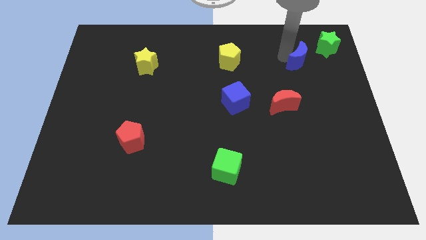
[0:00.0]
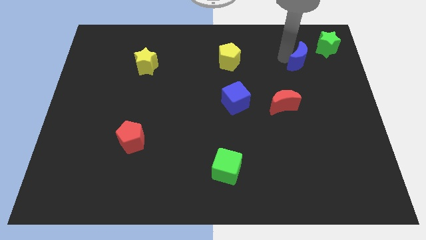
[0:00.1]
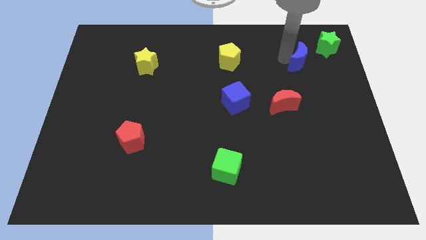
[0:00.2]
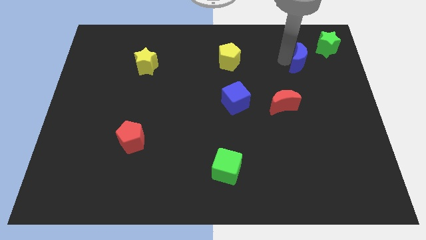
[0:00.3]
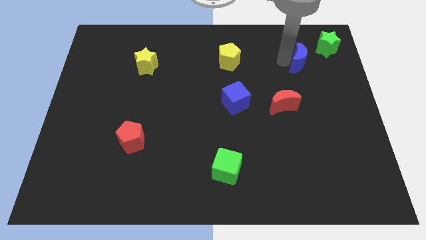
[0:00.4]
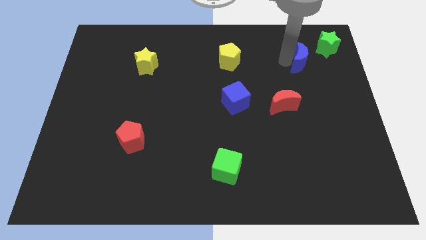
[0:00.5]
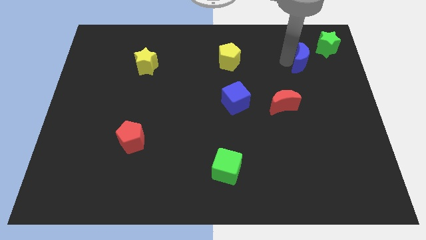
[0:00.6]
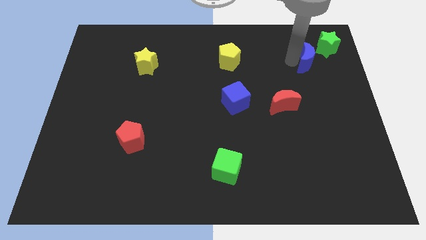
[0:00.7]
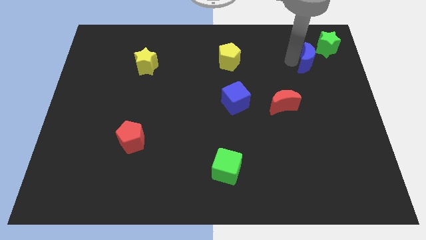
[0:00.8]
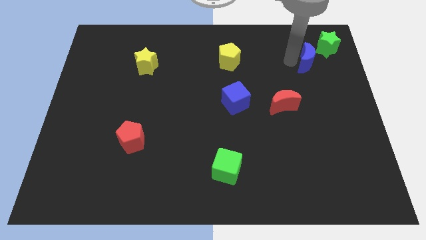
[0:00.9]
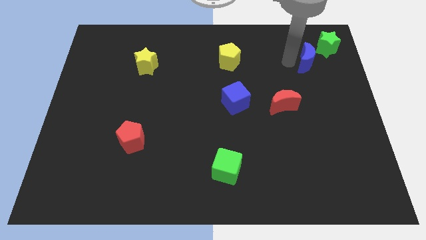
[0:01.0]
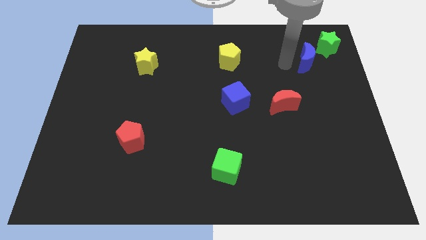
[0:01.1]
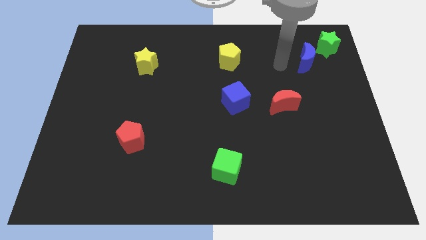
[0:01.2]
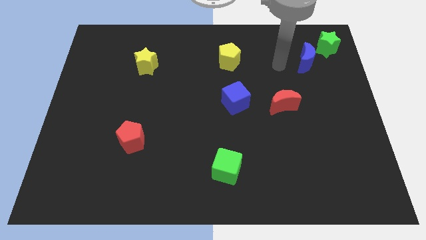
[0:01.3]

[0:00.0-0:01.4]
place the blue crescent to the left of the green star

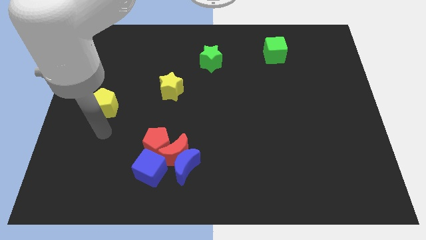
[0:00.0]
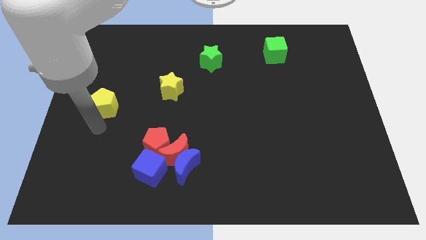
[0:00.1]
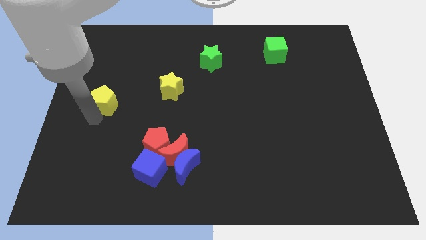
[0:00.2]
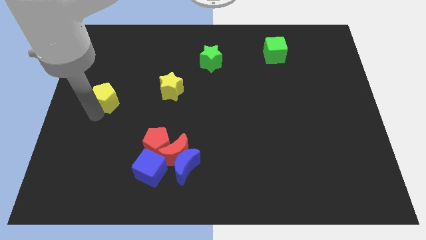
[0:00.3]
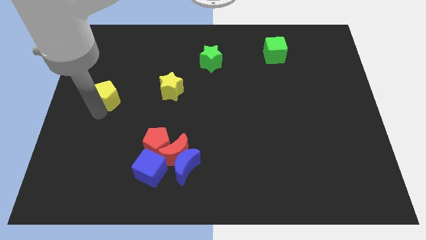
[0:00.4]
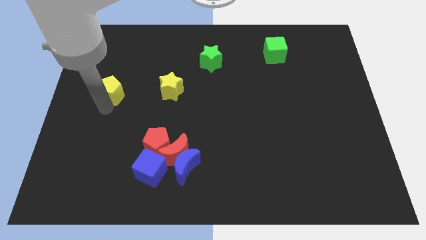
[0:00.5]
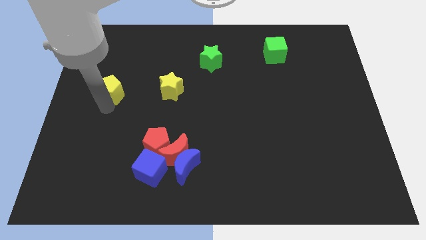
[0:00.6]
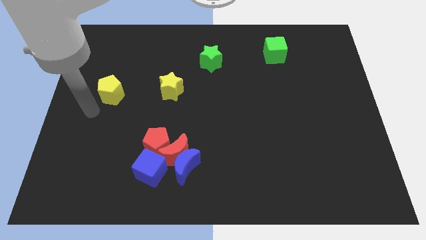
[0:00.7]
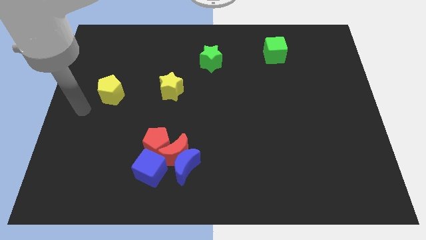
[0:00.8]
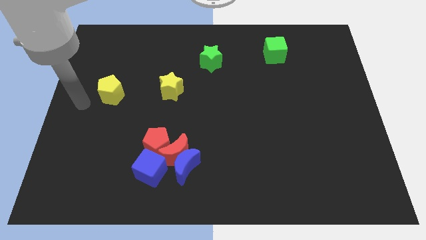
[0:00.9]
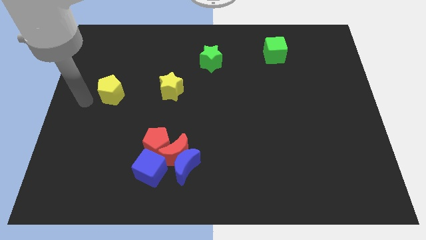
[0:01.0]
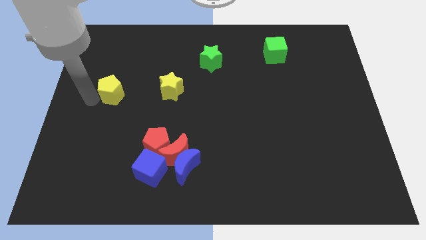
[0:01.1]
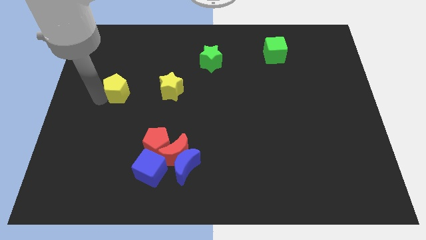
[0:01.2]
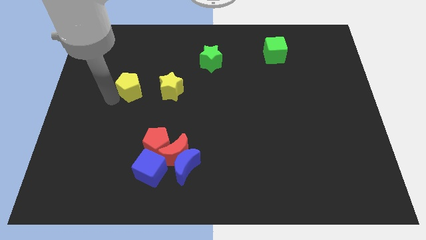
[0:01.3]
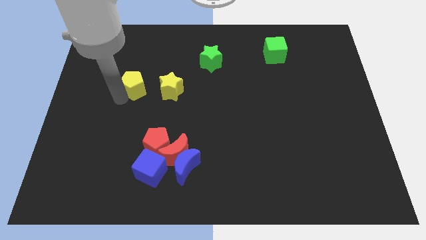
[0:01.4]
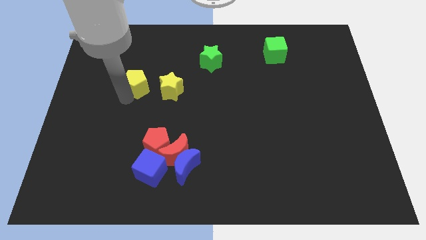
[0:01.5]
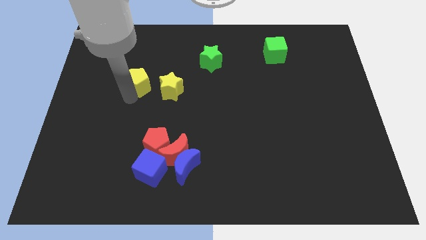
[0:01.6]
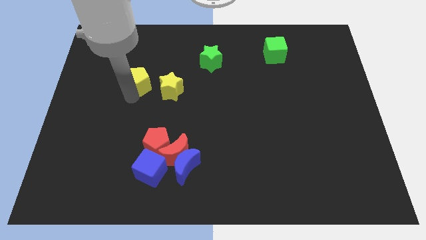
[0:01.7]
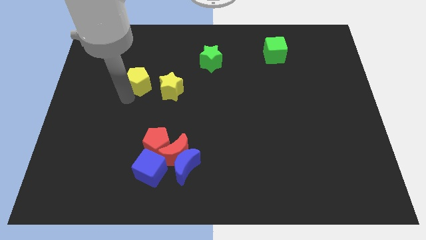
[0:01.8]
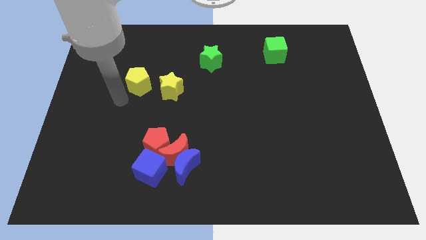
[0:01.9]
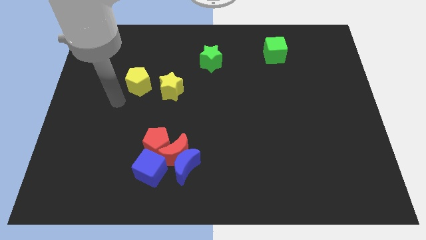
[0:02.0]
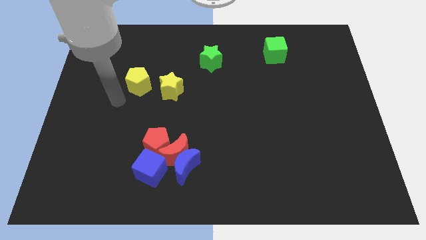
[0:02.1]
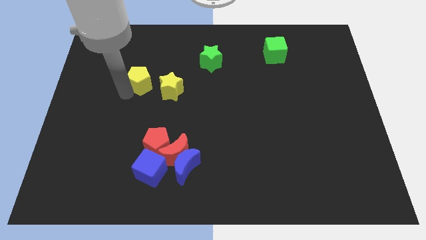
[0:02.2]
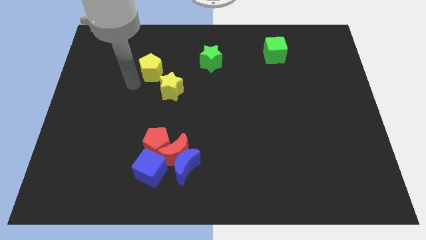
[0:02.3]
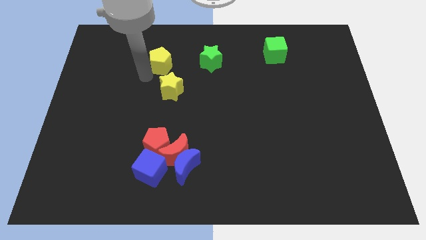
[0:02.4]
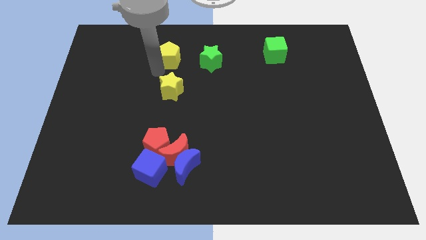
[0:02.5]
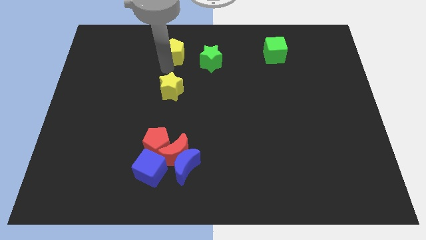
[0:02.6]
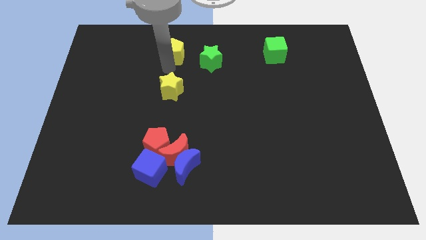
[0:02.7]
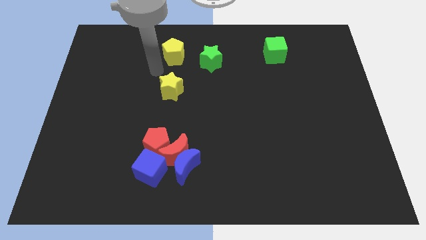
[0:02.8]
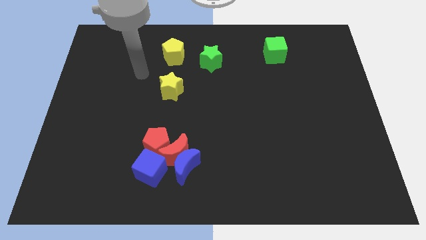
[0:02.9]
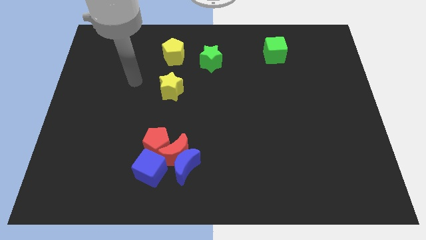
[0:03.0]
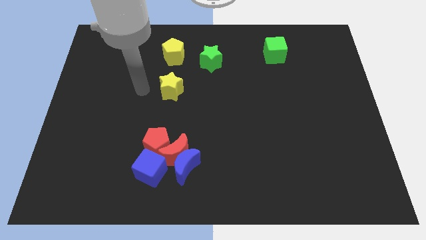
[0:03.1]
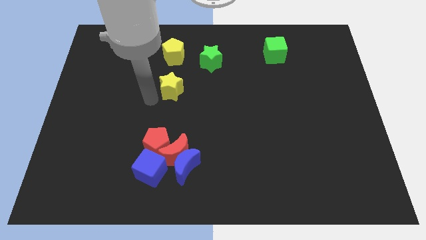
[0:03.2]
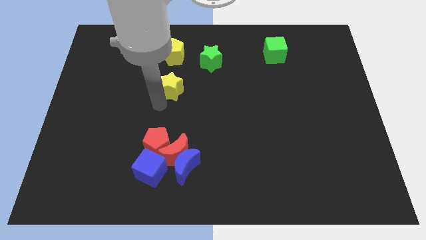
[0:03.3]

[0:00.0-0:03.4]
place the yellow pentagon above the yellow star

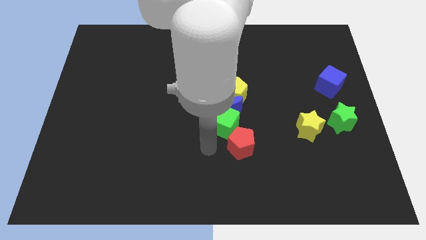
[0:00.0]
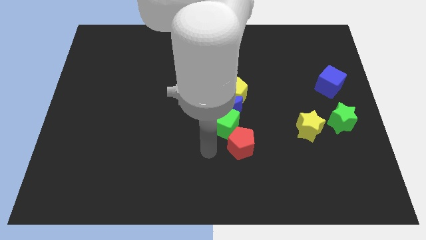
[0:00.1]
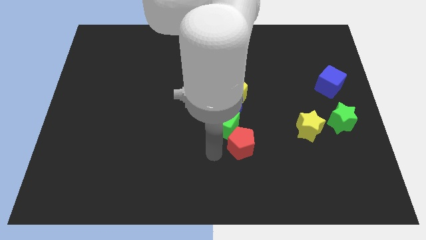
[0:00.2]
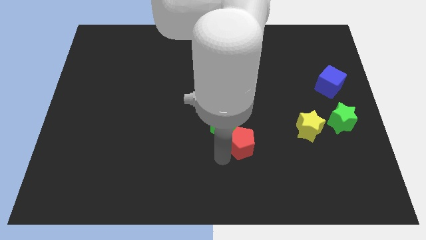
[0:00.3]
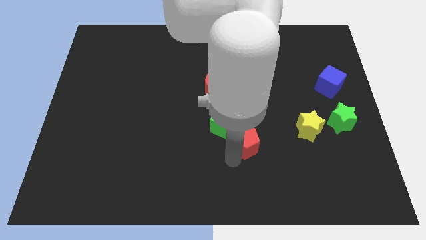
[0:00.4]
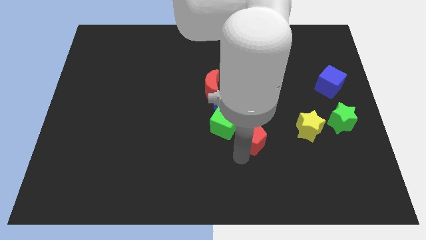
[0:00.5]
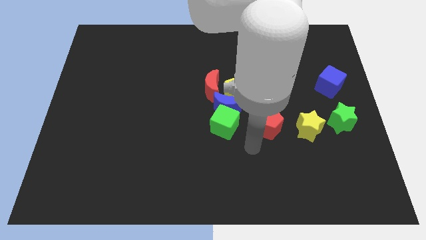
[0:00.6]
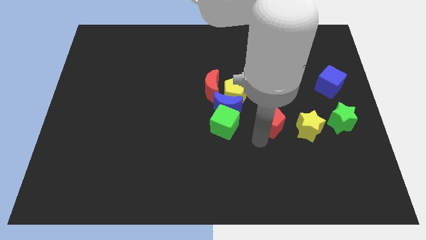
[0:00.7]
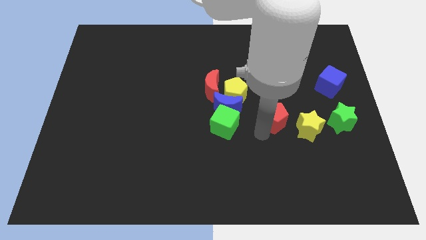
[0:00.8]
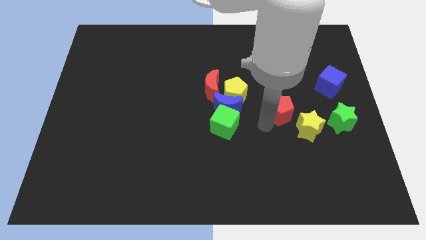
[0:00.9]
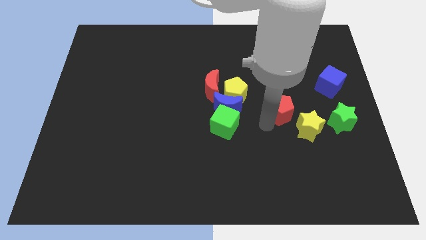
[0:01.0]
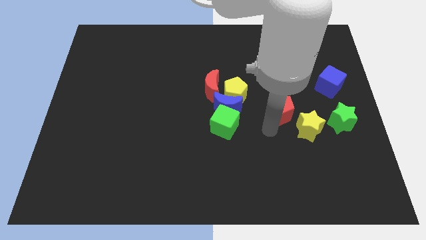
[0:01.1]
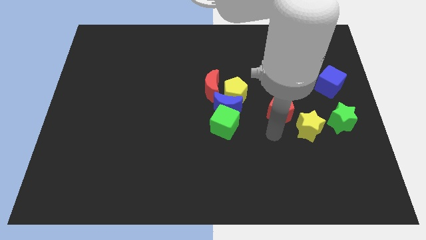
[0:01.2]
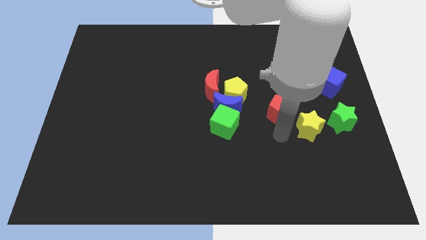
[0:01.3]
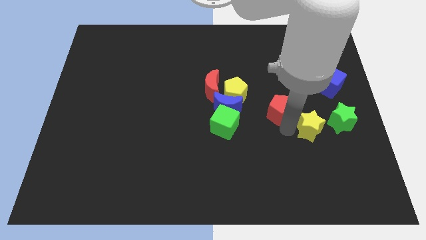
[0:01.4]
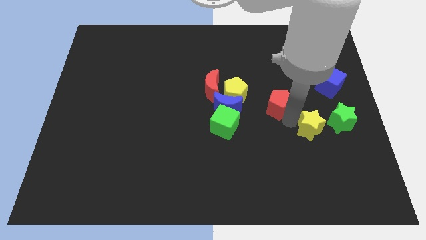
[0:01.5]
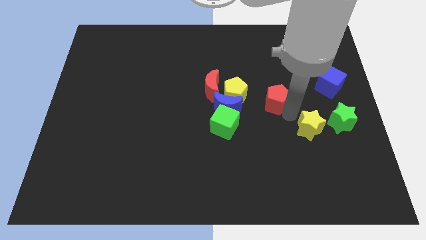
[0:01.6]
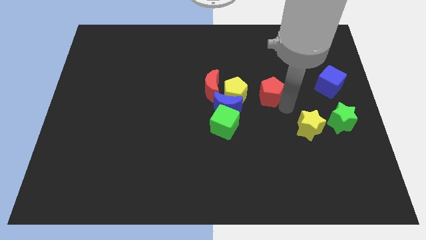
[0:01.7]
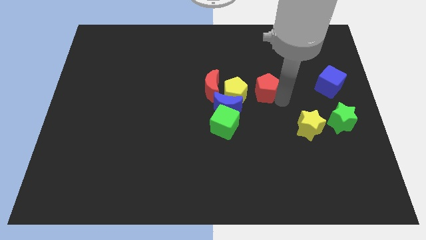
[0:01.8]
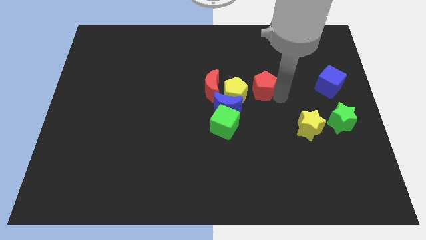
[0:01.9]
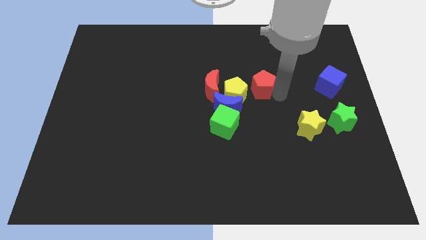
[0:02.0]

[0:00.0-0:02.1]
move the red pentagon to the right side of the yellow pentagon

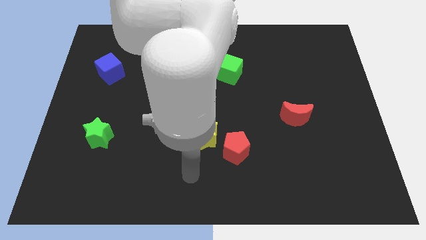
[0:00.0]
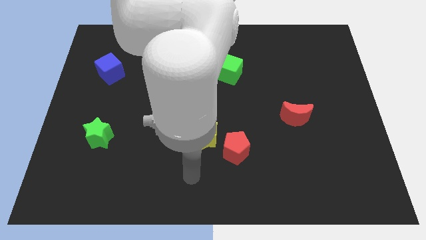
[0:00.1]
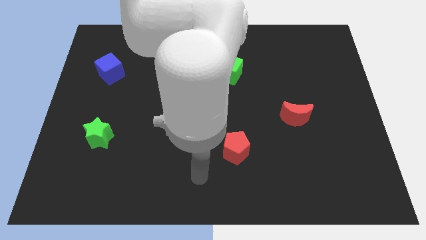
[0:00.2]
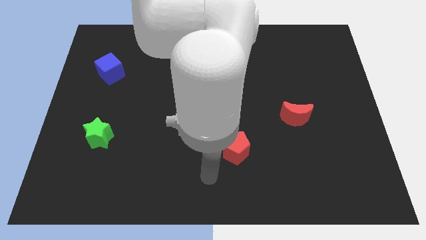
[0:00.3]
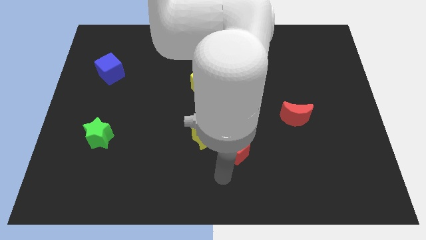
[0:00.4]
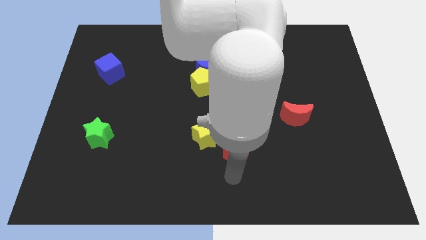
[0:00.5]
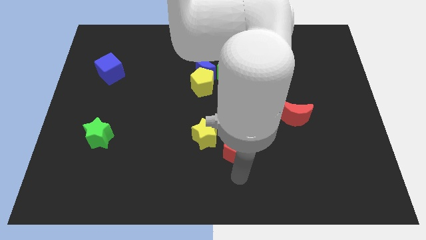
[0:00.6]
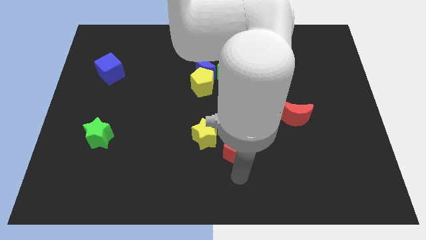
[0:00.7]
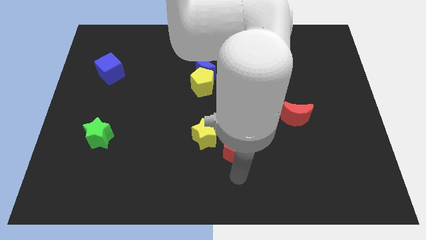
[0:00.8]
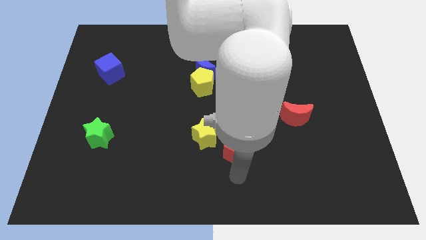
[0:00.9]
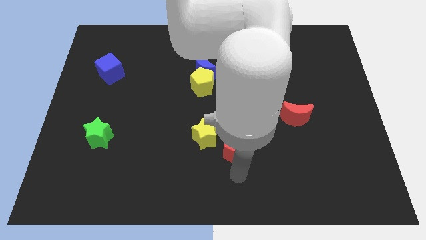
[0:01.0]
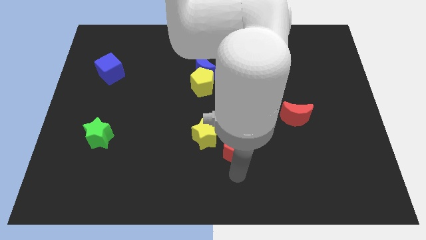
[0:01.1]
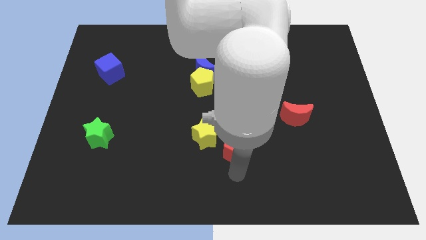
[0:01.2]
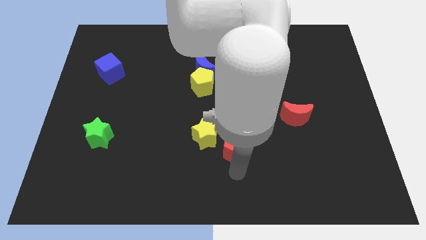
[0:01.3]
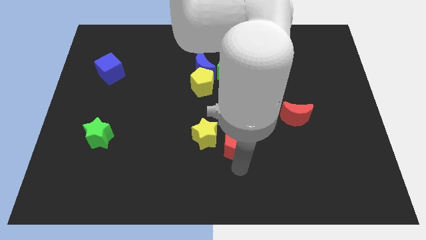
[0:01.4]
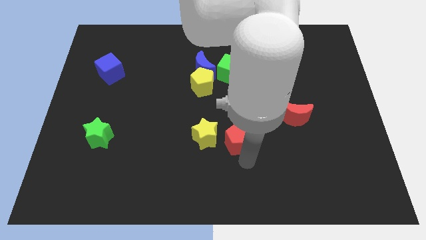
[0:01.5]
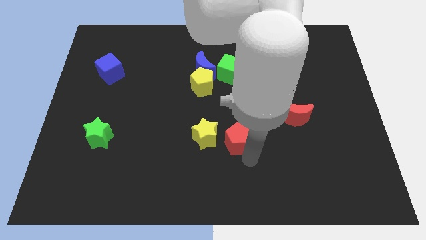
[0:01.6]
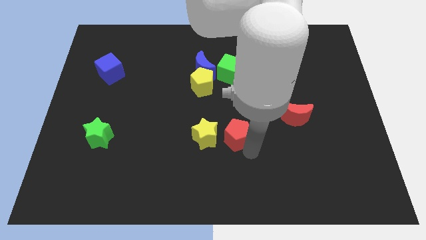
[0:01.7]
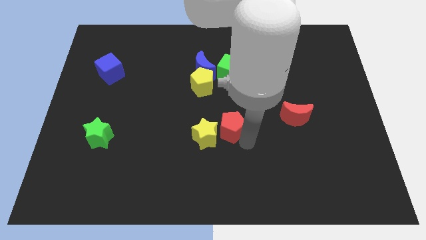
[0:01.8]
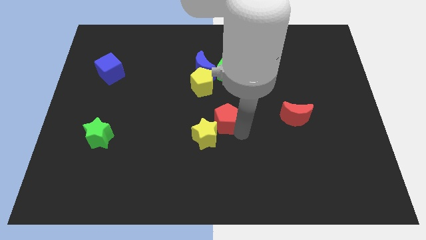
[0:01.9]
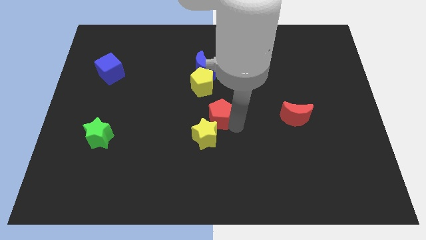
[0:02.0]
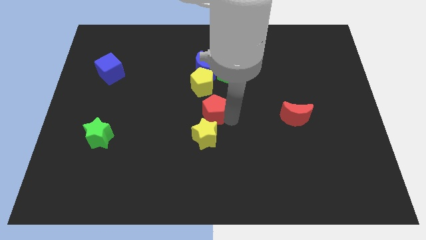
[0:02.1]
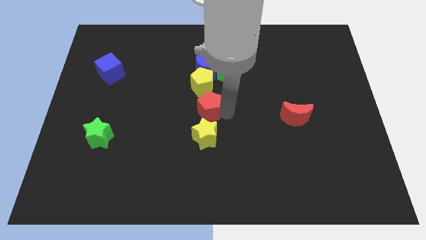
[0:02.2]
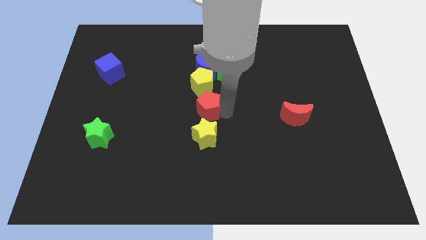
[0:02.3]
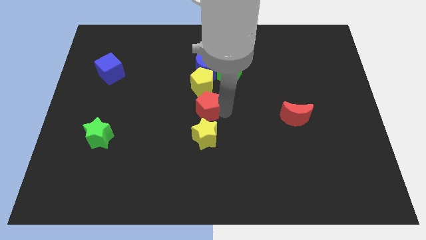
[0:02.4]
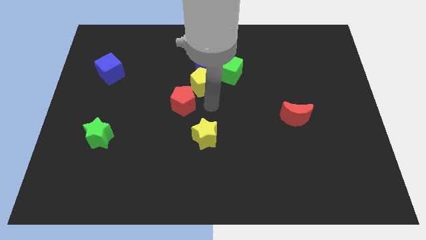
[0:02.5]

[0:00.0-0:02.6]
move the red pentagon parallel to the yellow pentagon
